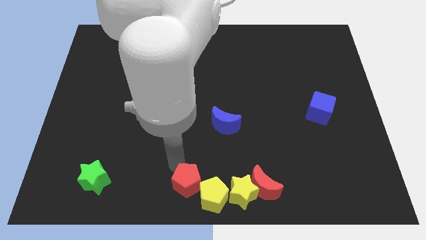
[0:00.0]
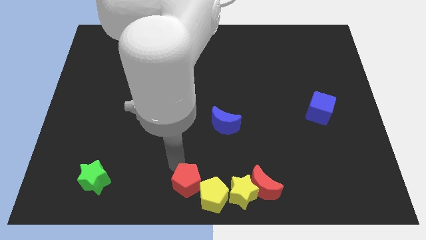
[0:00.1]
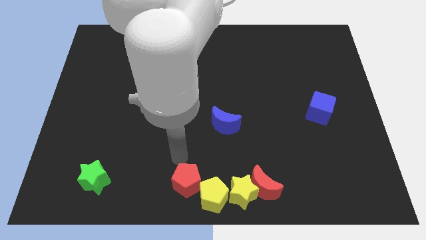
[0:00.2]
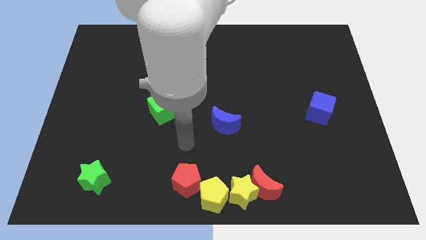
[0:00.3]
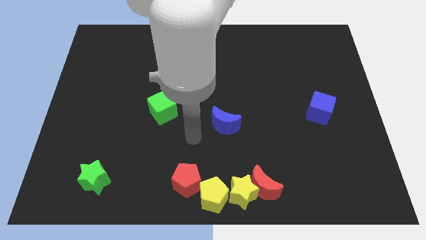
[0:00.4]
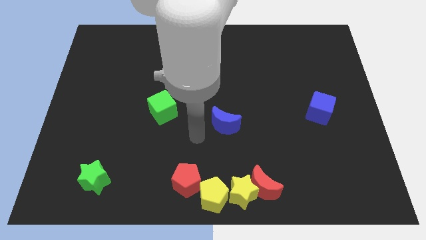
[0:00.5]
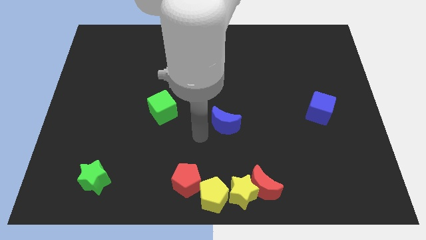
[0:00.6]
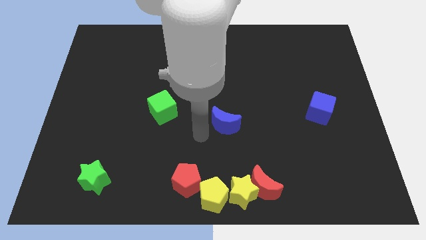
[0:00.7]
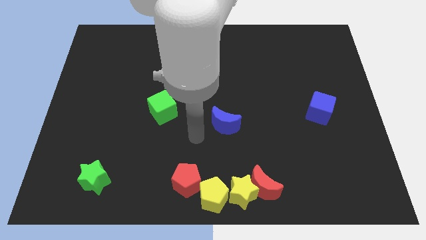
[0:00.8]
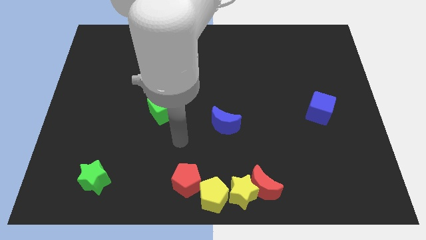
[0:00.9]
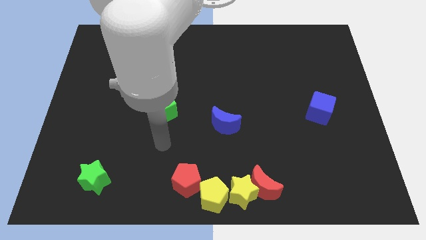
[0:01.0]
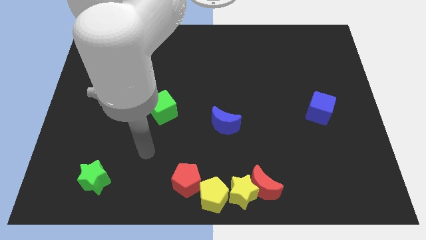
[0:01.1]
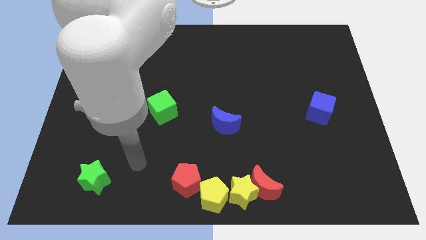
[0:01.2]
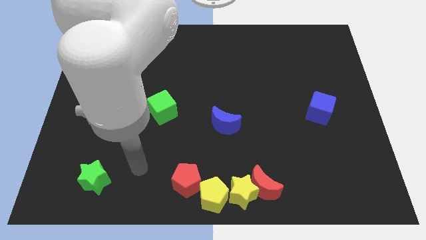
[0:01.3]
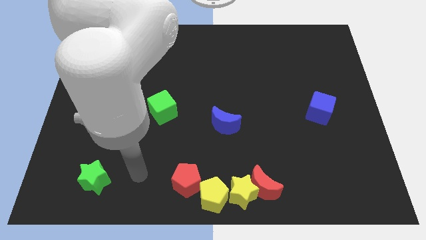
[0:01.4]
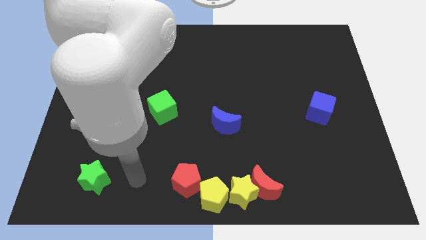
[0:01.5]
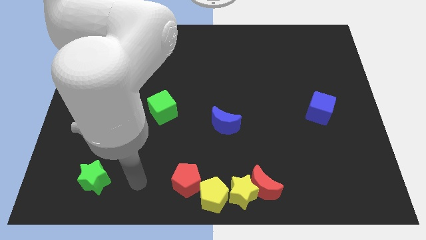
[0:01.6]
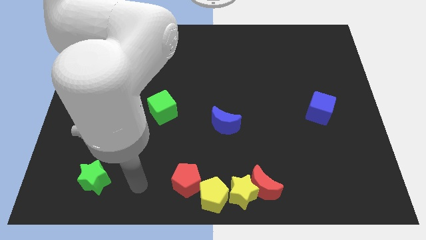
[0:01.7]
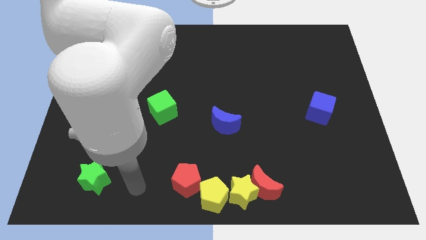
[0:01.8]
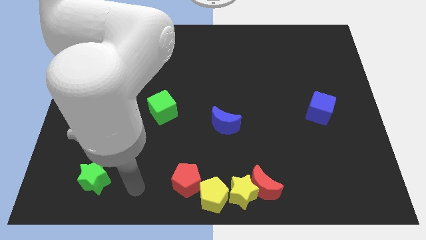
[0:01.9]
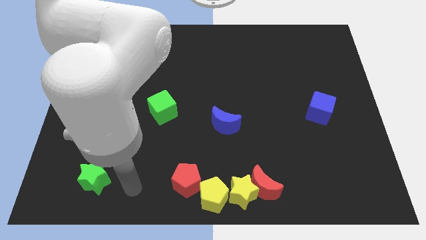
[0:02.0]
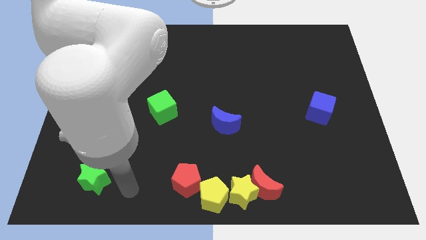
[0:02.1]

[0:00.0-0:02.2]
go away from the red pentagon

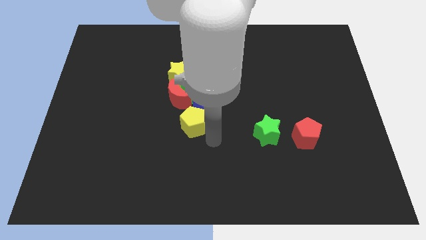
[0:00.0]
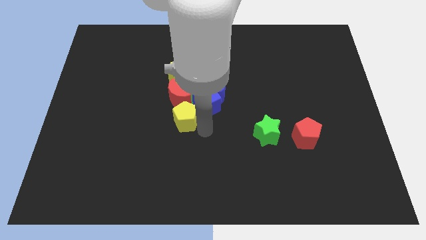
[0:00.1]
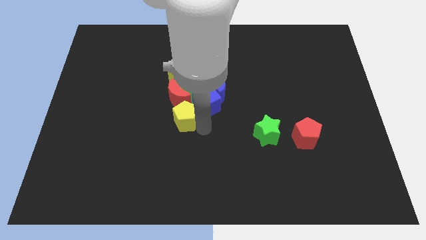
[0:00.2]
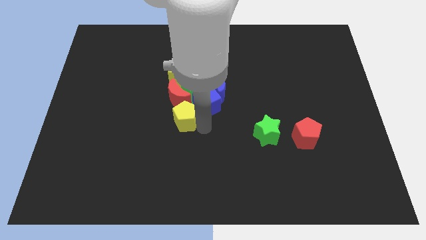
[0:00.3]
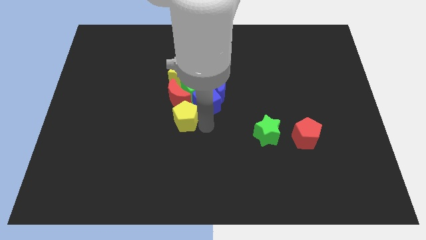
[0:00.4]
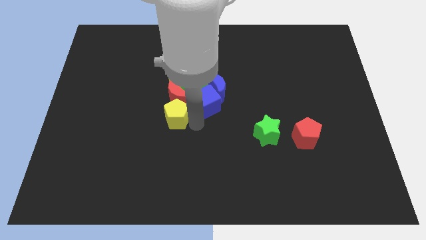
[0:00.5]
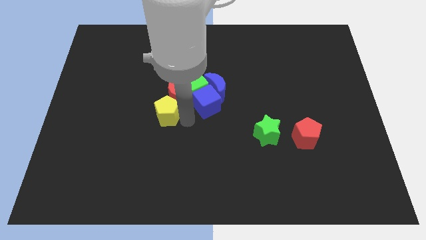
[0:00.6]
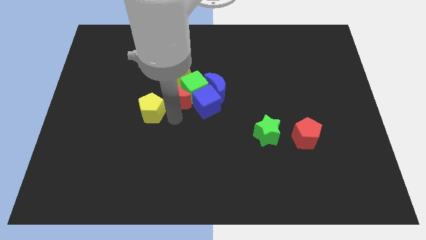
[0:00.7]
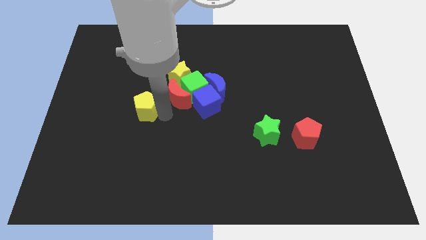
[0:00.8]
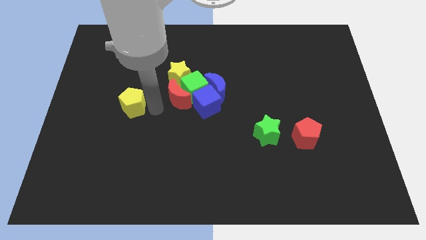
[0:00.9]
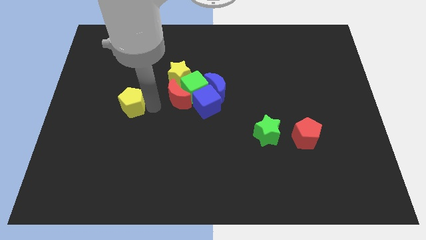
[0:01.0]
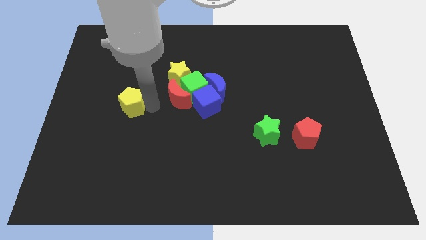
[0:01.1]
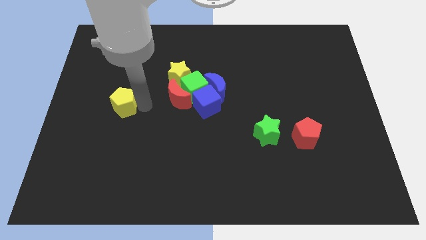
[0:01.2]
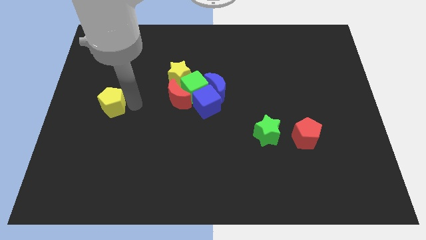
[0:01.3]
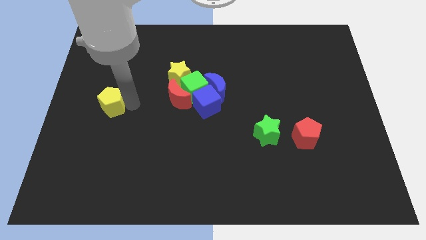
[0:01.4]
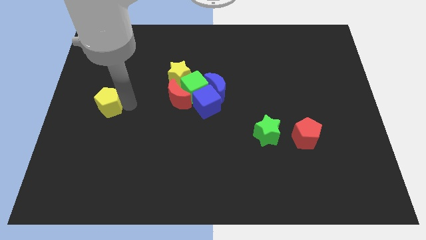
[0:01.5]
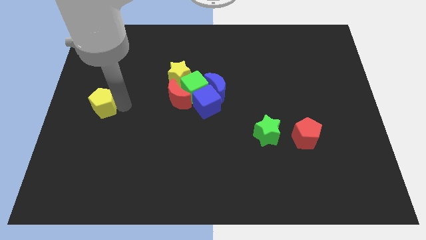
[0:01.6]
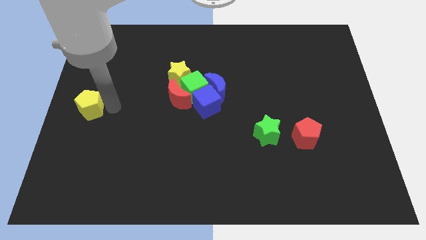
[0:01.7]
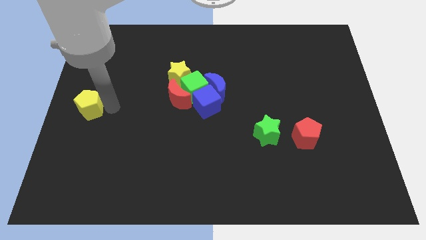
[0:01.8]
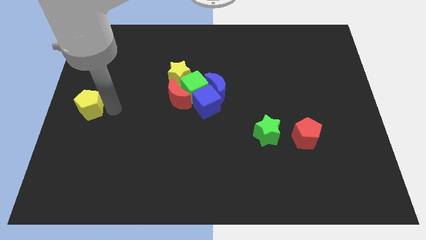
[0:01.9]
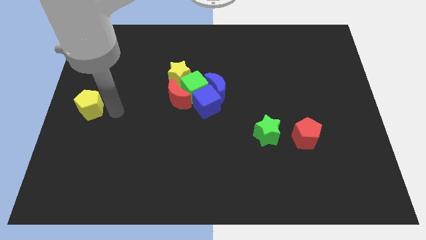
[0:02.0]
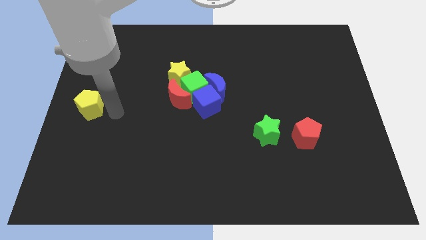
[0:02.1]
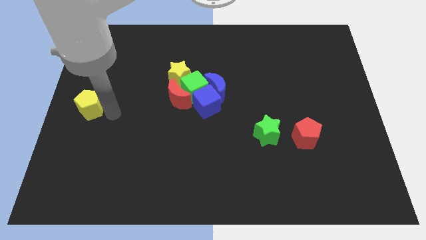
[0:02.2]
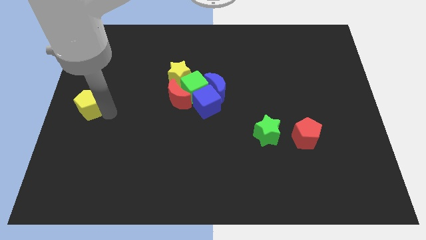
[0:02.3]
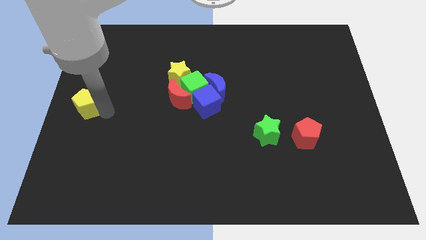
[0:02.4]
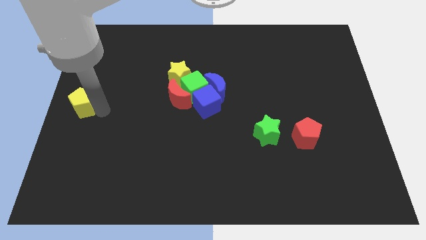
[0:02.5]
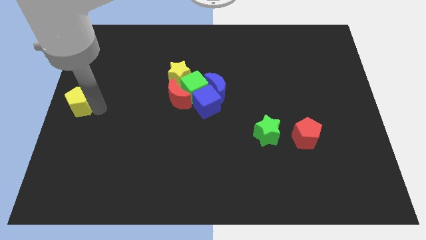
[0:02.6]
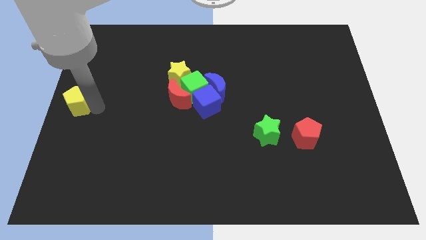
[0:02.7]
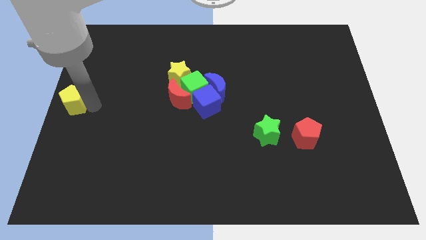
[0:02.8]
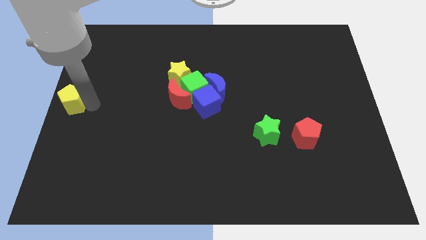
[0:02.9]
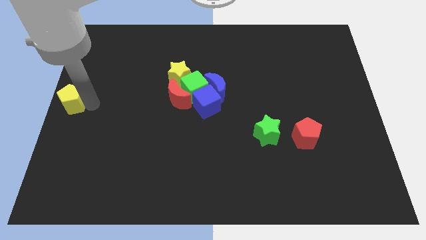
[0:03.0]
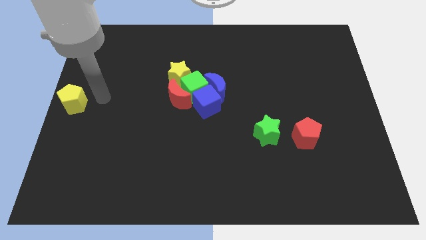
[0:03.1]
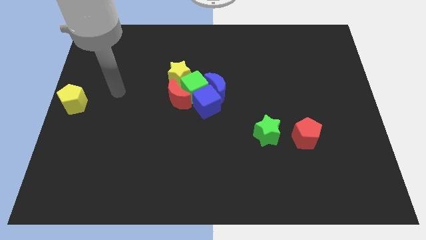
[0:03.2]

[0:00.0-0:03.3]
place the yellow pentagon to the center left

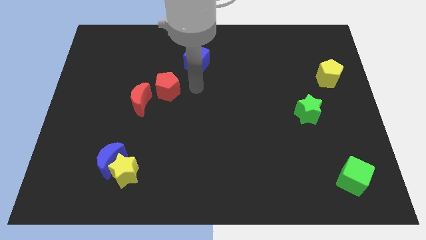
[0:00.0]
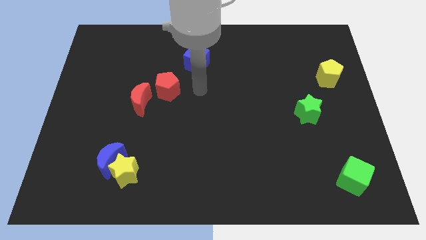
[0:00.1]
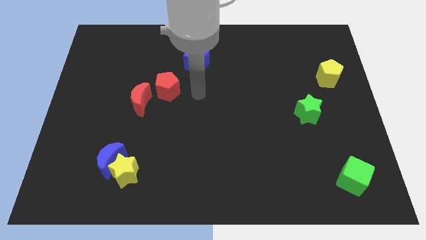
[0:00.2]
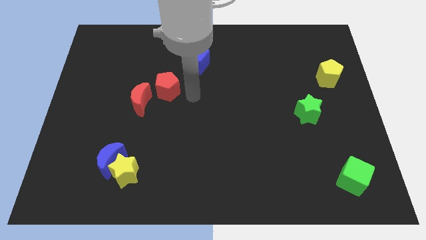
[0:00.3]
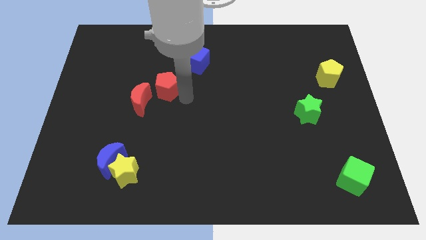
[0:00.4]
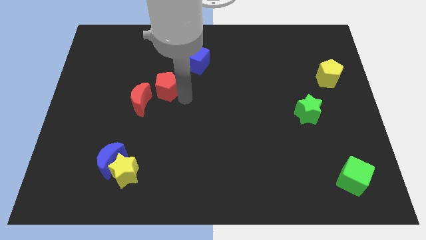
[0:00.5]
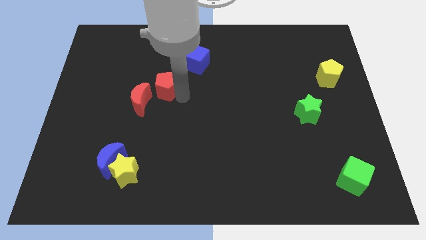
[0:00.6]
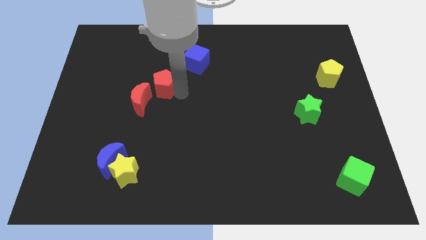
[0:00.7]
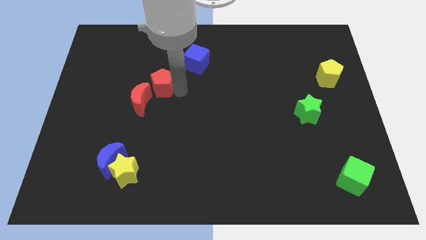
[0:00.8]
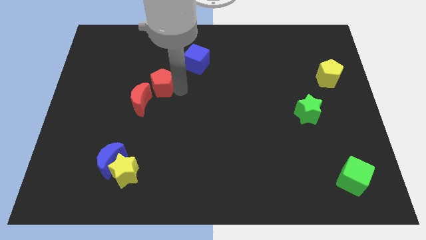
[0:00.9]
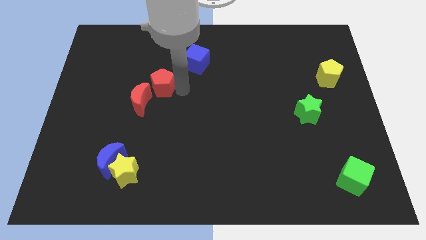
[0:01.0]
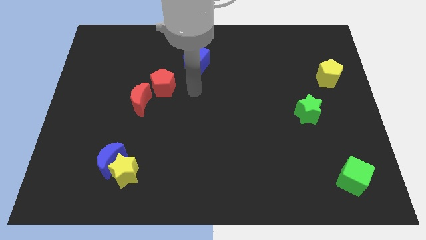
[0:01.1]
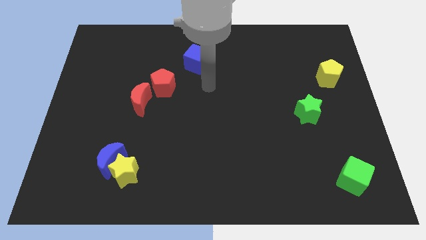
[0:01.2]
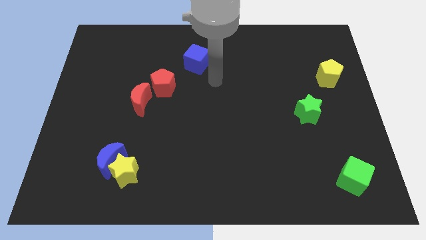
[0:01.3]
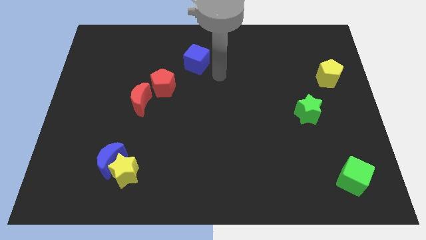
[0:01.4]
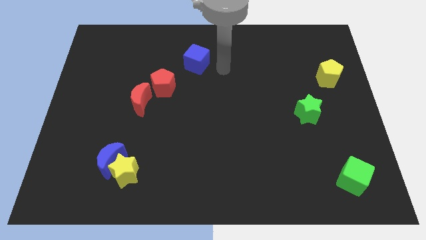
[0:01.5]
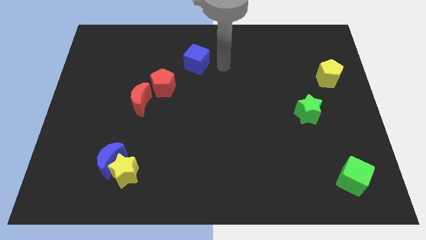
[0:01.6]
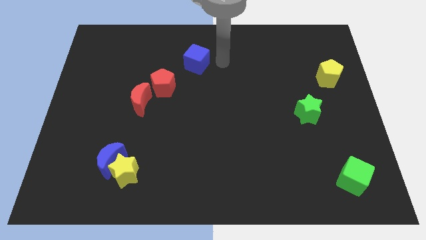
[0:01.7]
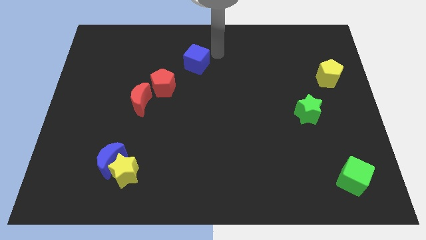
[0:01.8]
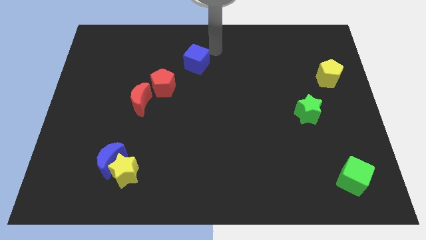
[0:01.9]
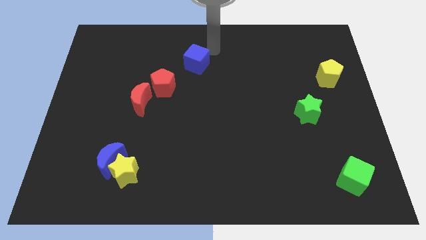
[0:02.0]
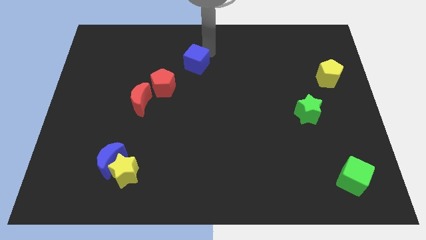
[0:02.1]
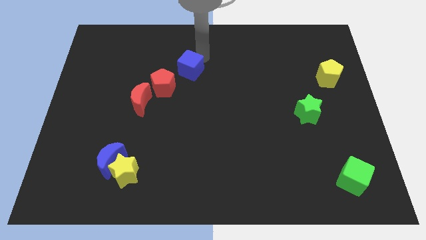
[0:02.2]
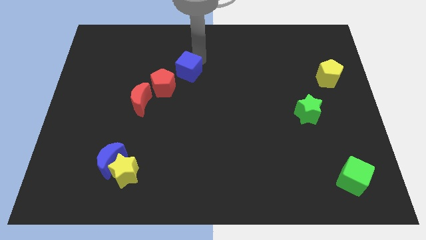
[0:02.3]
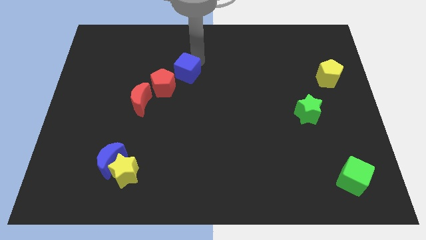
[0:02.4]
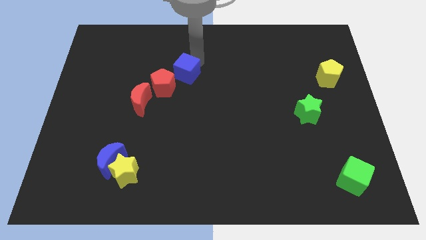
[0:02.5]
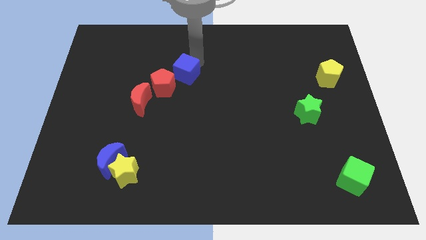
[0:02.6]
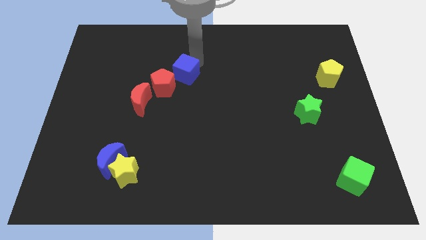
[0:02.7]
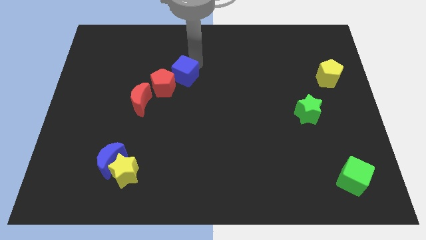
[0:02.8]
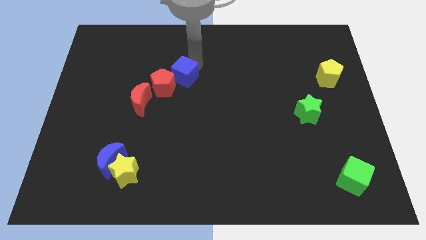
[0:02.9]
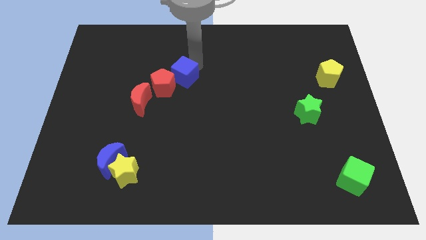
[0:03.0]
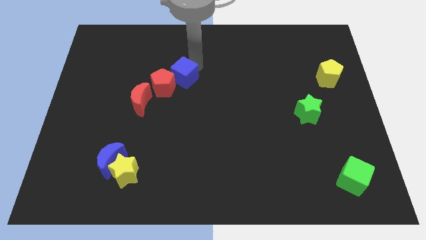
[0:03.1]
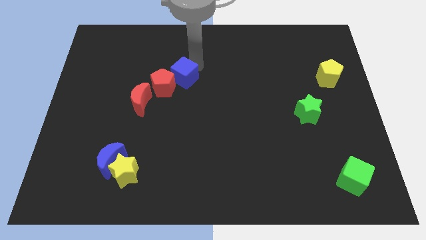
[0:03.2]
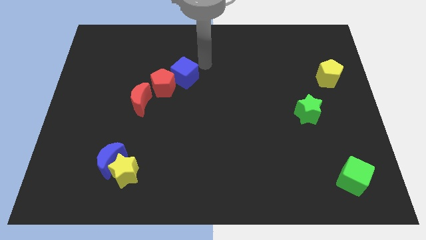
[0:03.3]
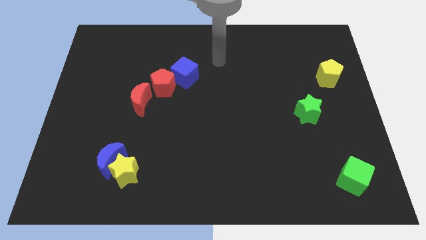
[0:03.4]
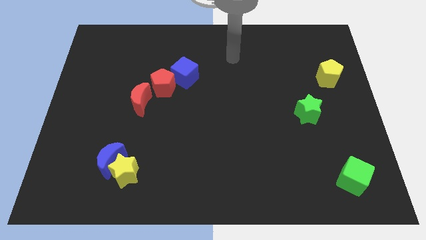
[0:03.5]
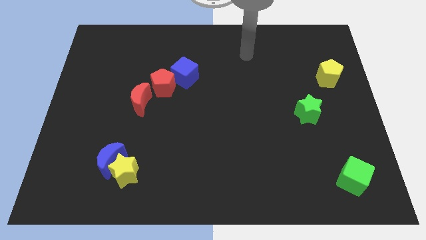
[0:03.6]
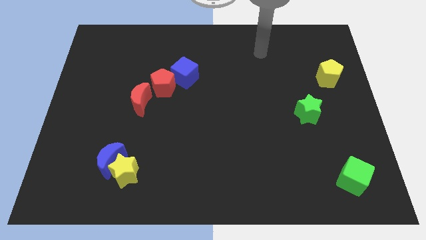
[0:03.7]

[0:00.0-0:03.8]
adjust the red moon red pentagon and the blue cube diagonally
